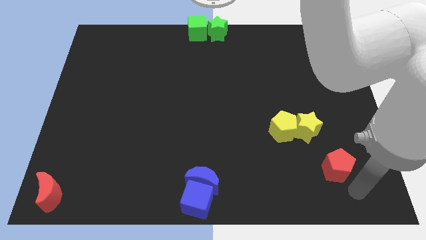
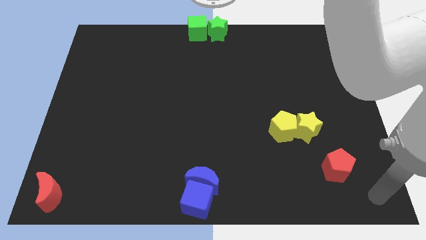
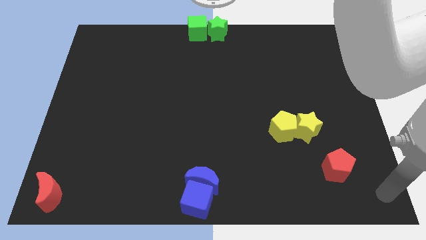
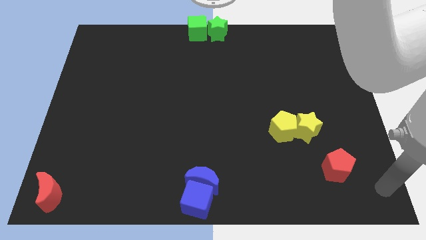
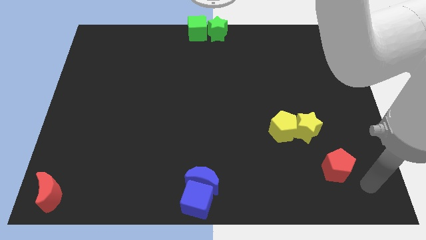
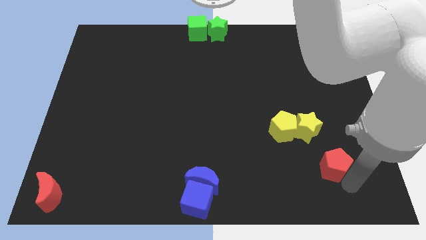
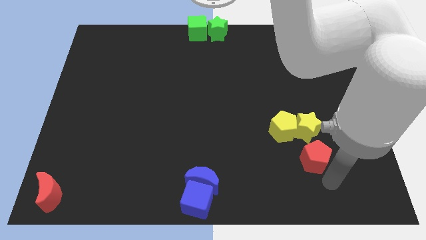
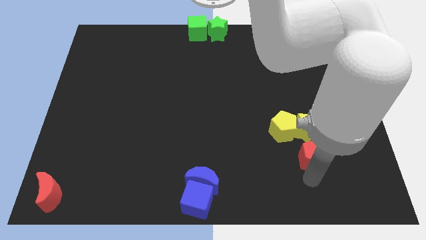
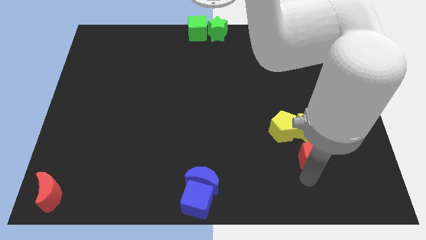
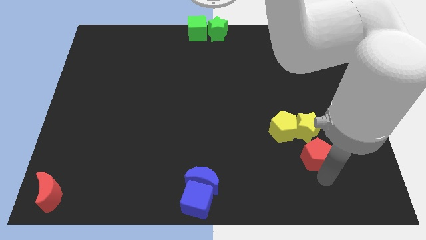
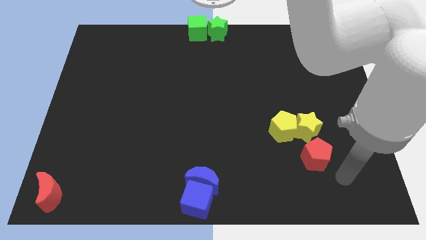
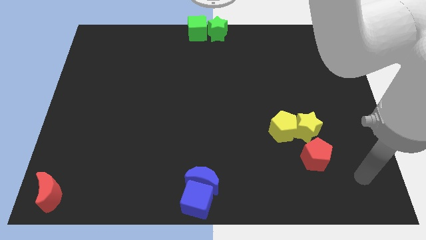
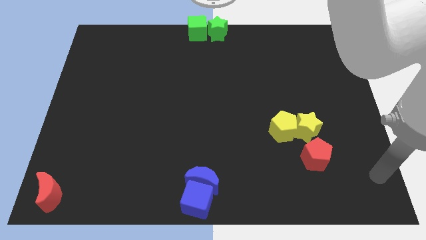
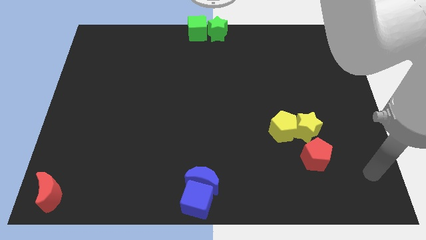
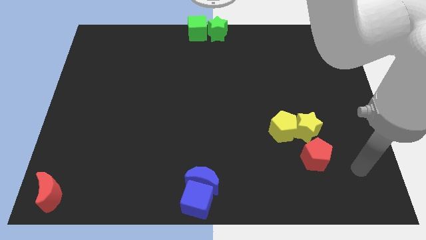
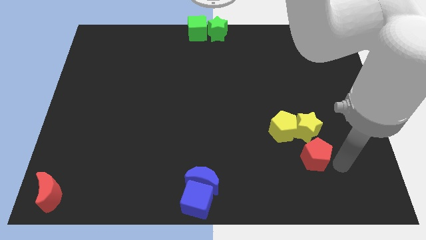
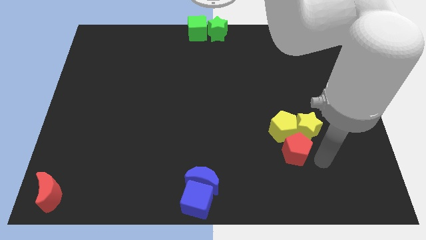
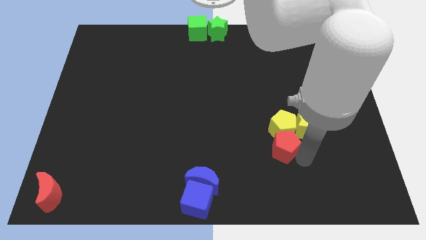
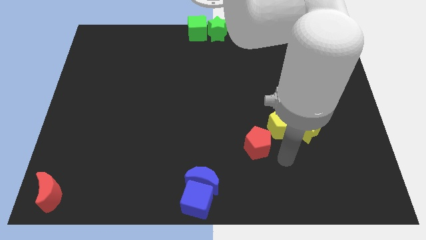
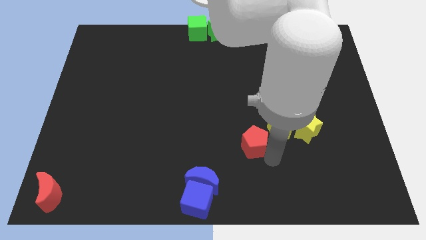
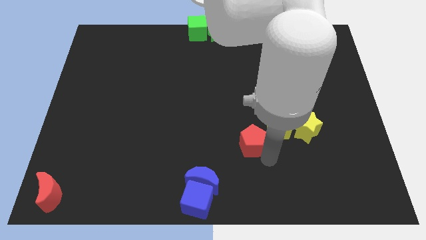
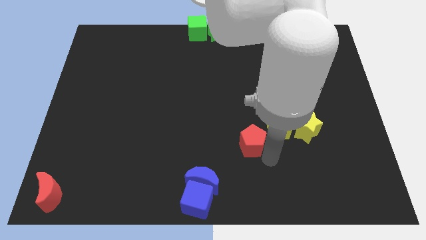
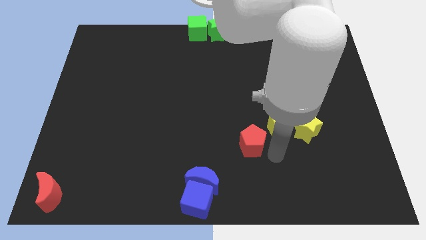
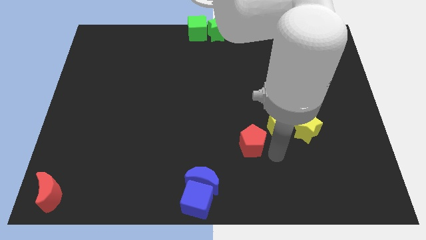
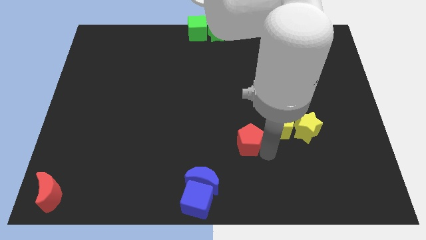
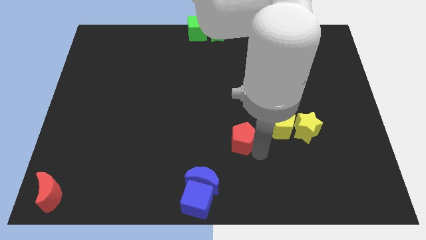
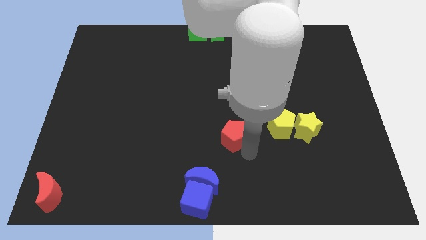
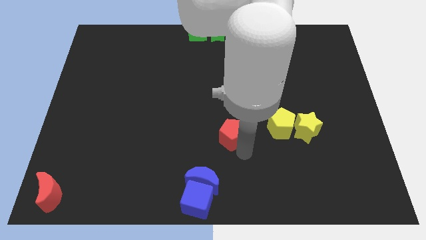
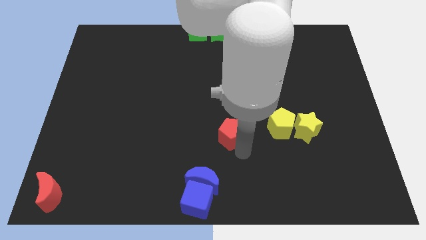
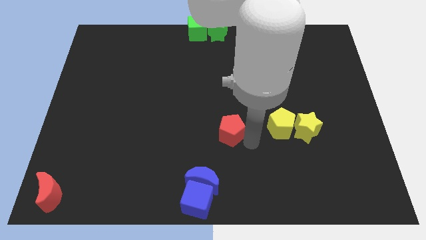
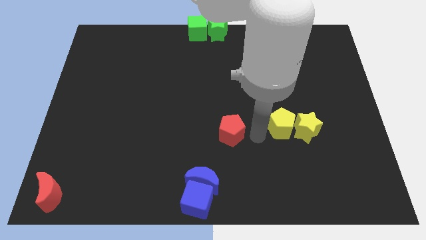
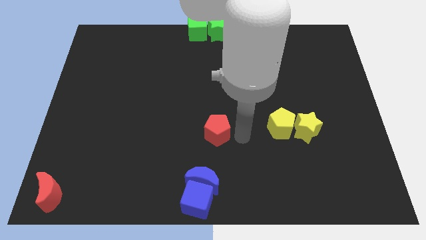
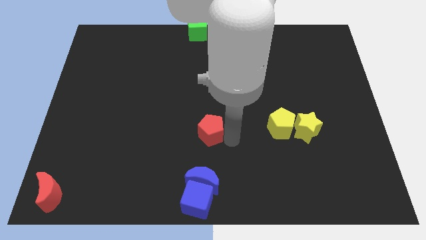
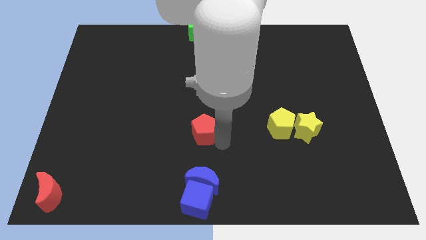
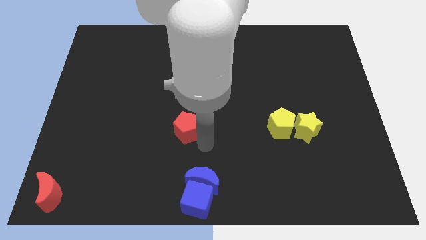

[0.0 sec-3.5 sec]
push red pentagon above blue crescent

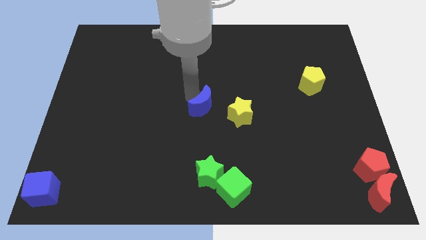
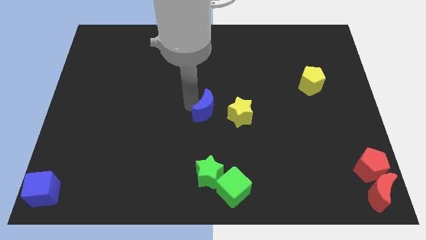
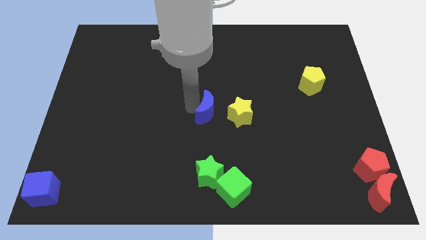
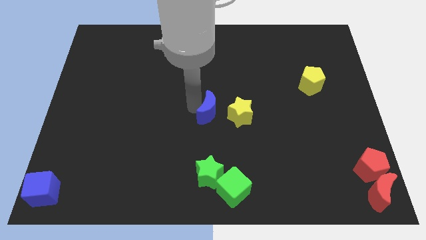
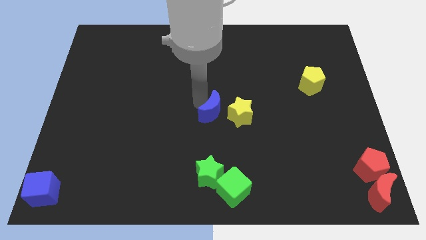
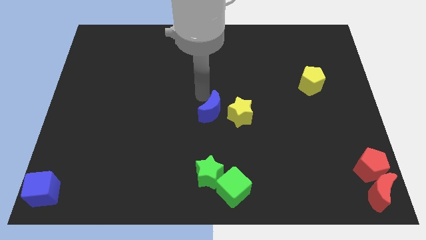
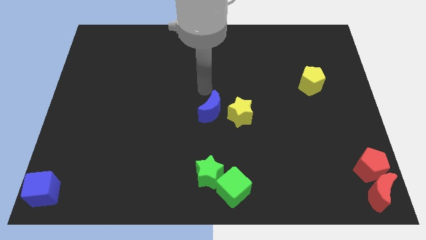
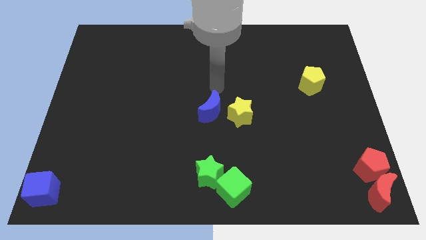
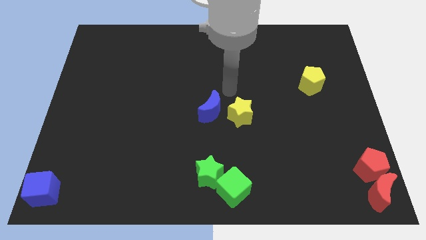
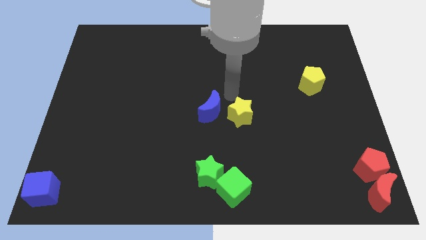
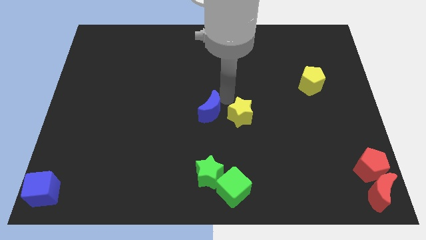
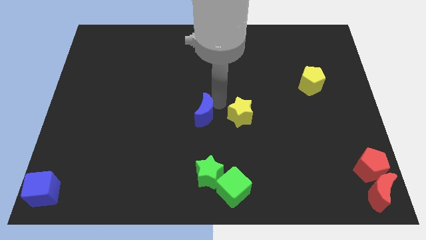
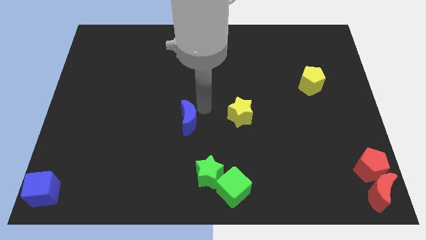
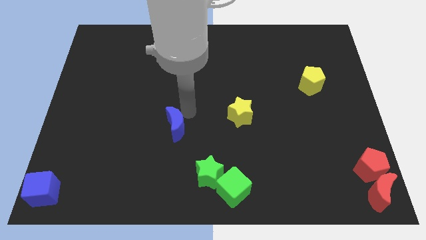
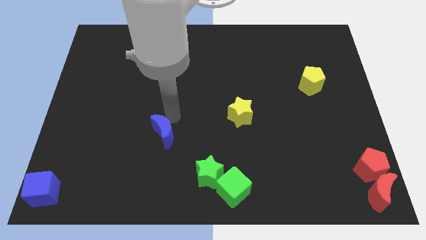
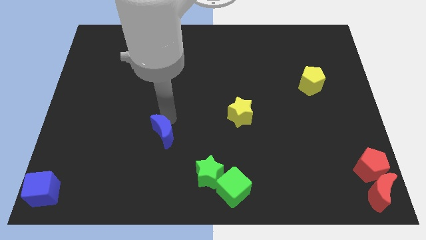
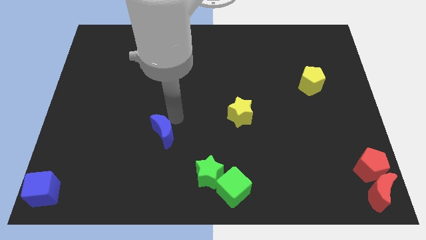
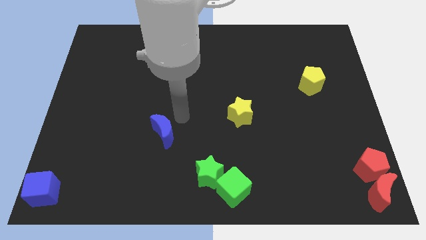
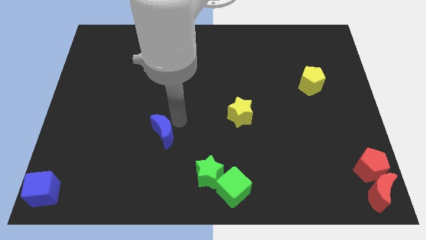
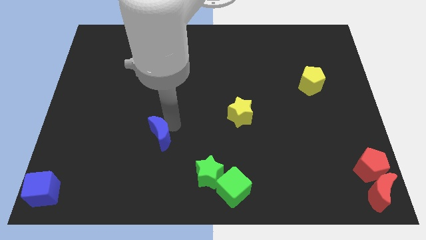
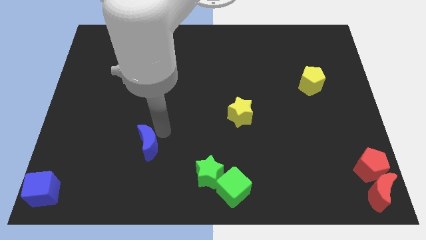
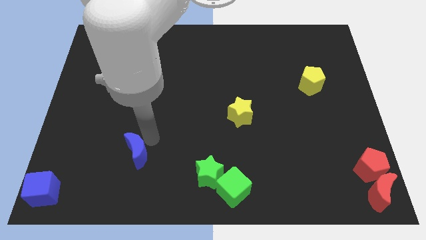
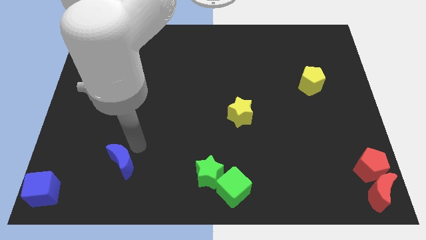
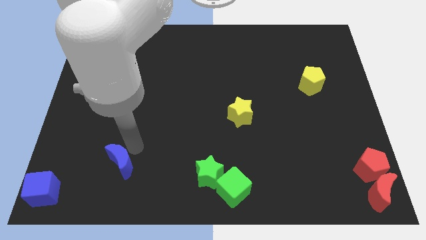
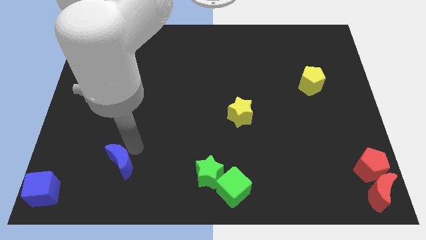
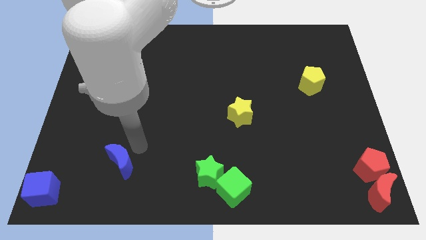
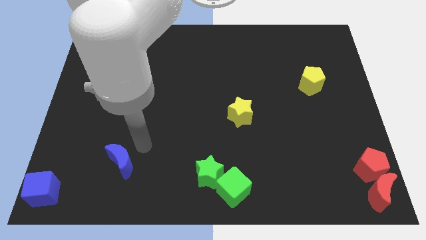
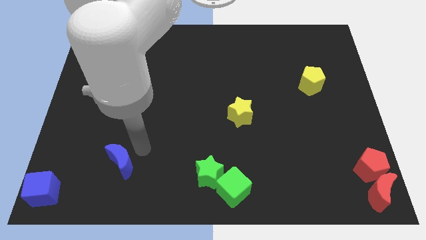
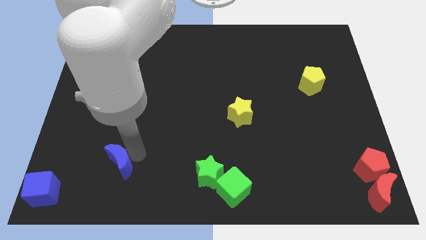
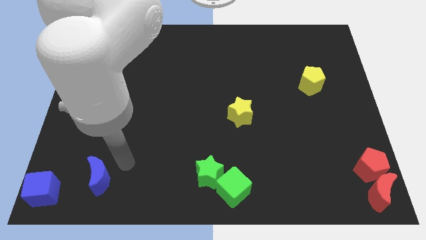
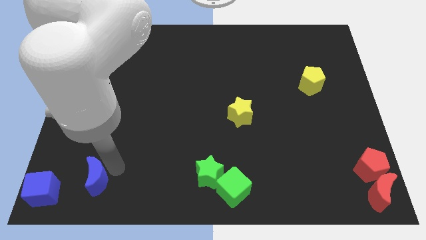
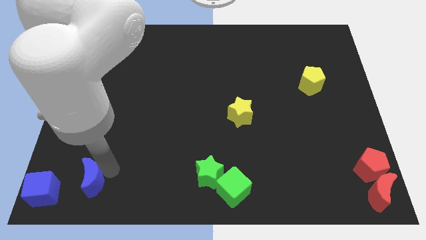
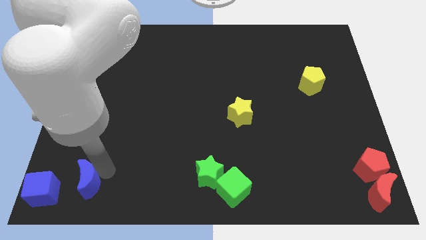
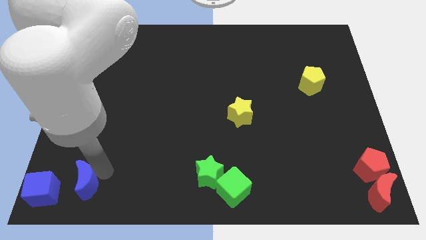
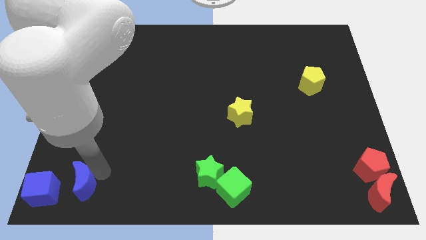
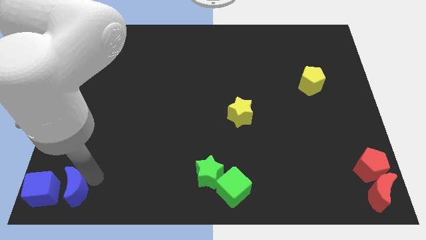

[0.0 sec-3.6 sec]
place the blue moon to the right of blue cube

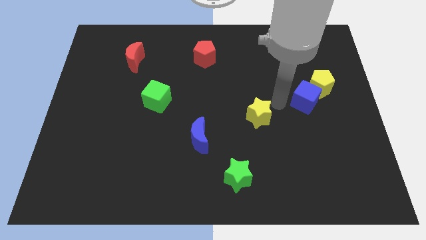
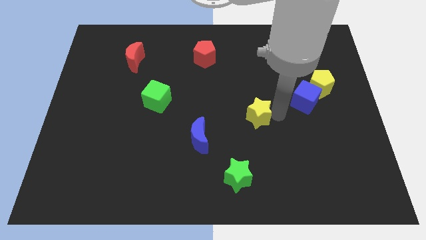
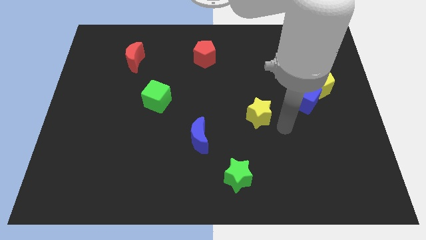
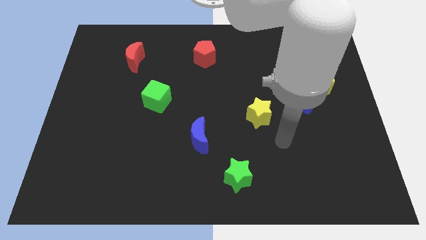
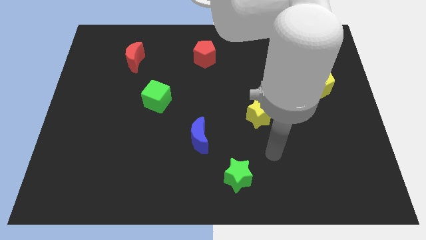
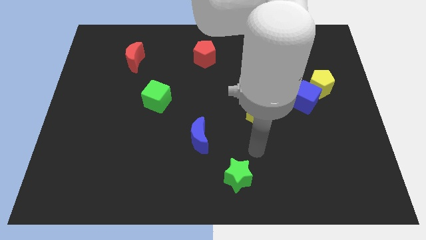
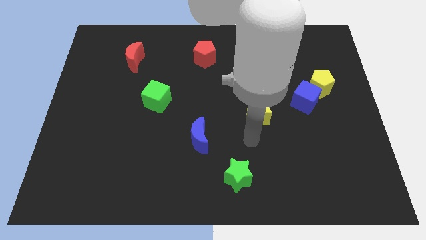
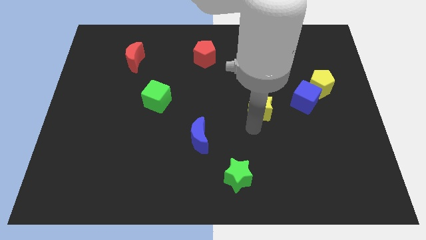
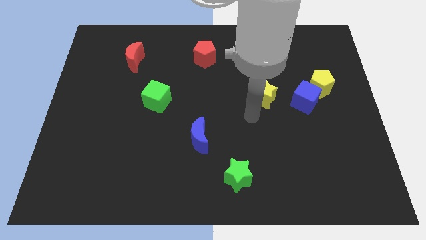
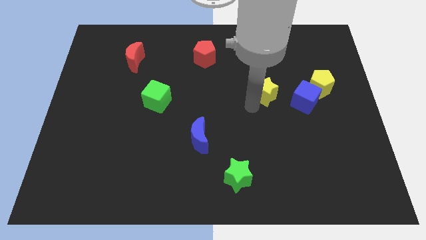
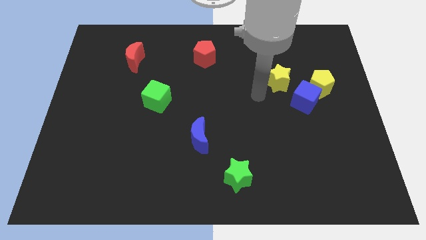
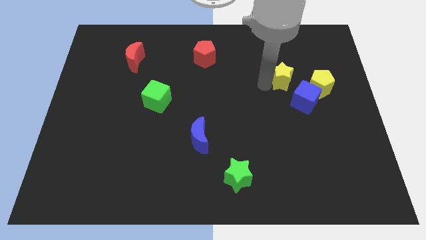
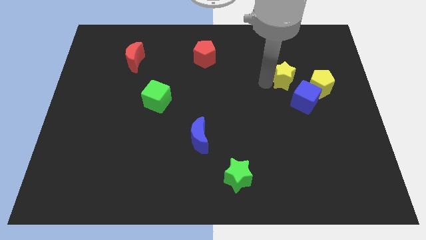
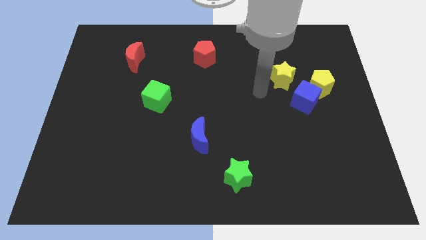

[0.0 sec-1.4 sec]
move the yellow star to the left of the yellow pentagon

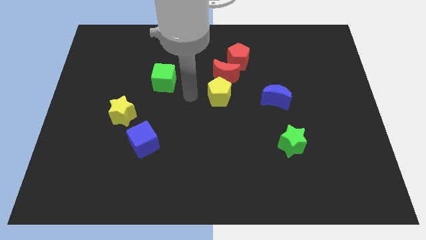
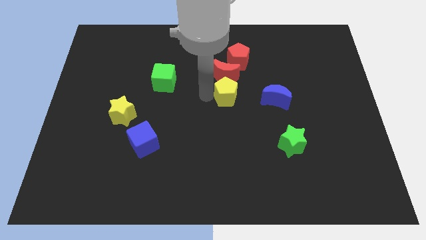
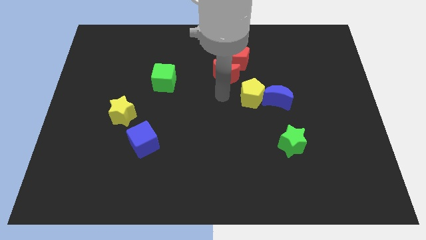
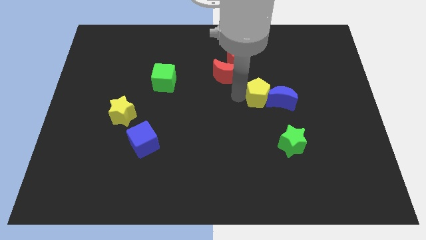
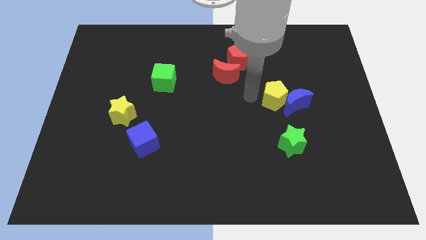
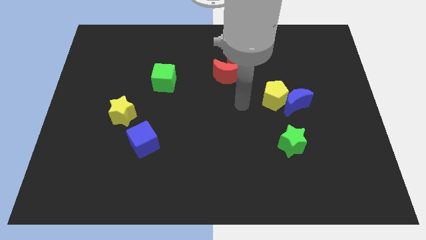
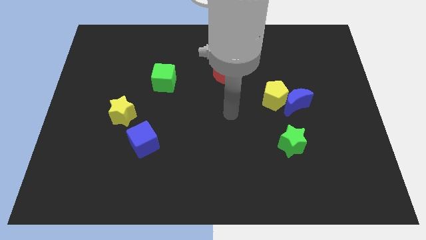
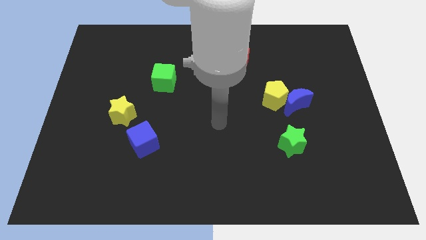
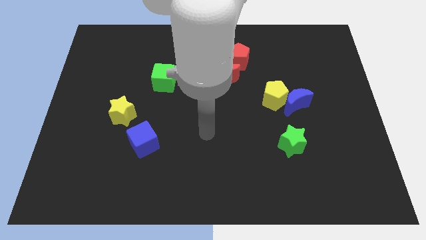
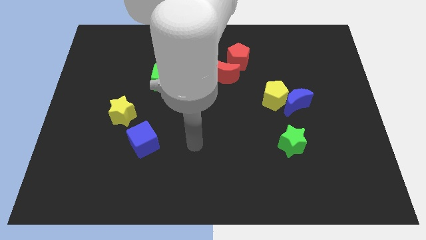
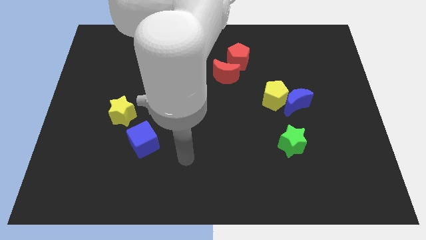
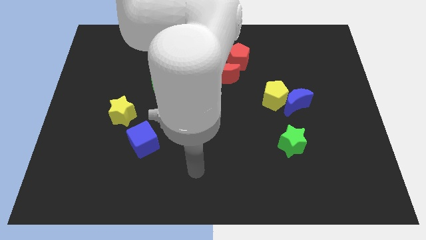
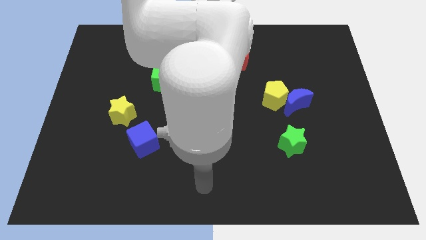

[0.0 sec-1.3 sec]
move the yellow pentagon into the blue cube
